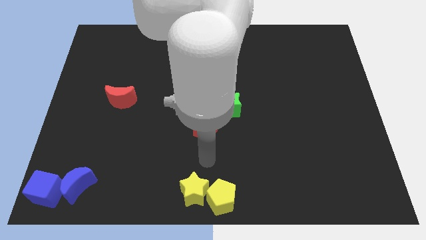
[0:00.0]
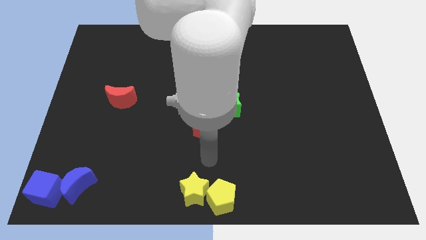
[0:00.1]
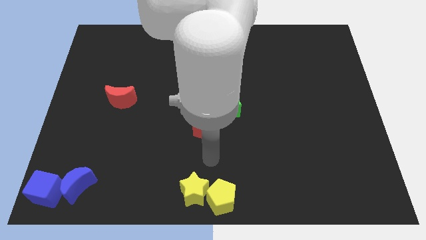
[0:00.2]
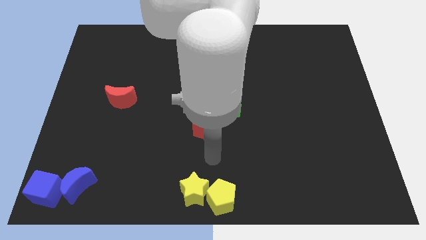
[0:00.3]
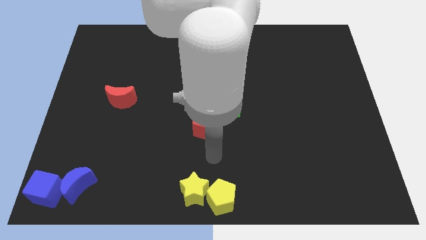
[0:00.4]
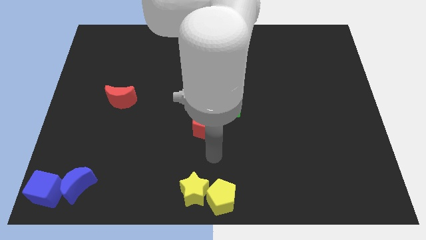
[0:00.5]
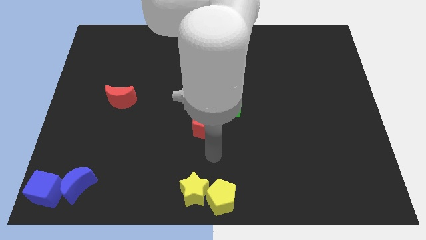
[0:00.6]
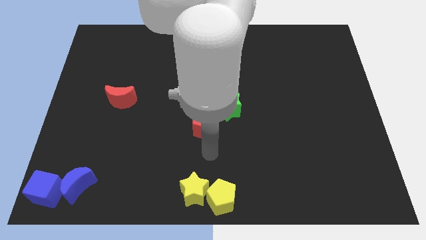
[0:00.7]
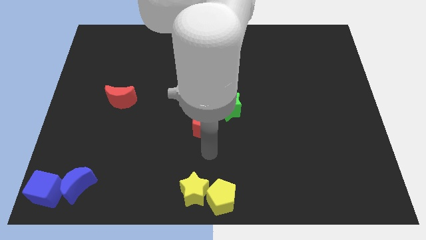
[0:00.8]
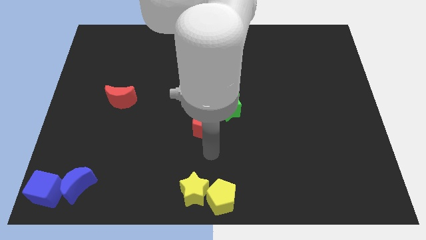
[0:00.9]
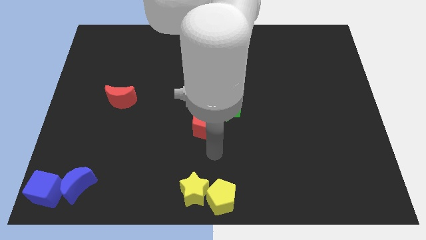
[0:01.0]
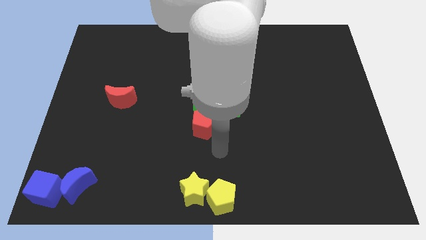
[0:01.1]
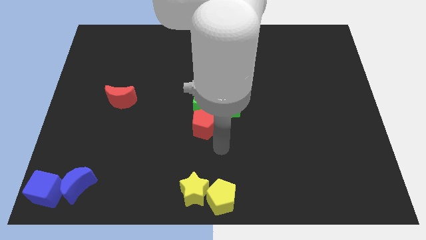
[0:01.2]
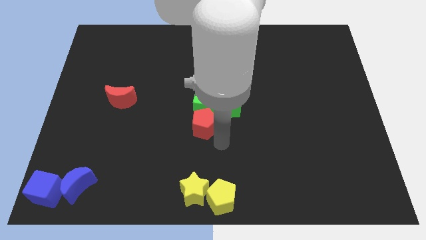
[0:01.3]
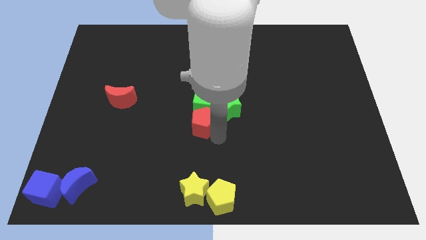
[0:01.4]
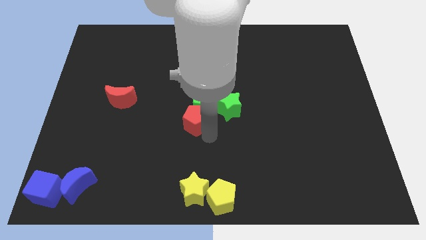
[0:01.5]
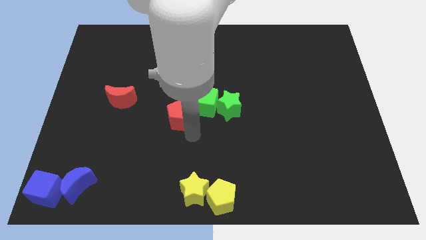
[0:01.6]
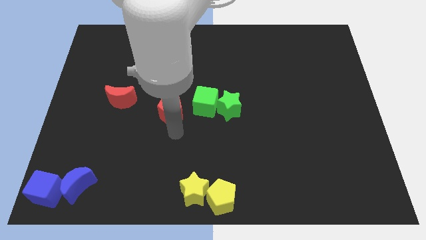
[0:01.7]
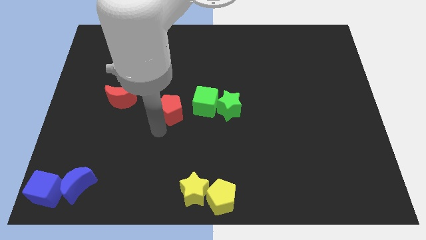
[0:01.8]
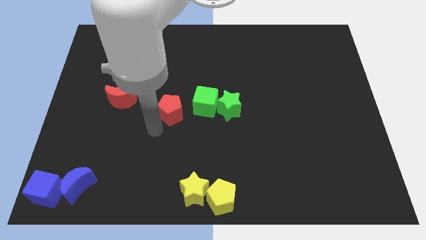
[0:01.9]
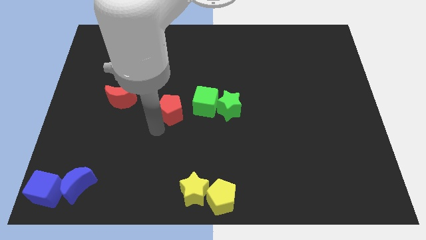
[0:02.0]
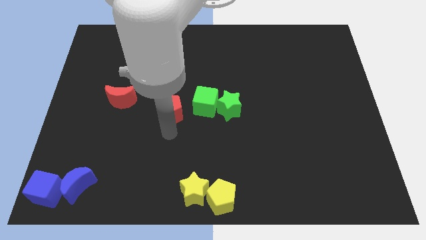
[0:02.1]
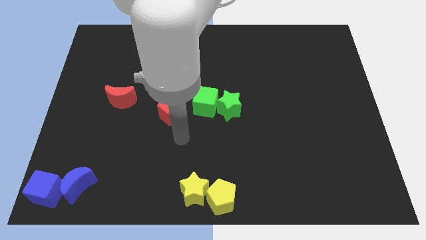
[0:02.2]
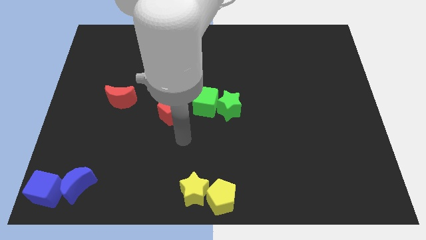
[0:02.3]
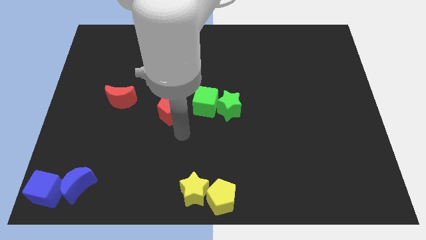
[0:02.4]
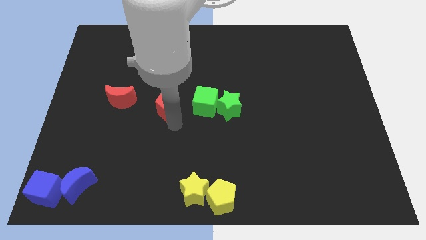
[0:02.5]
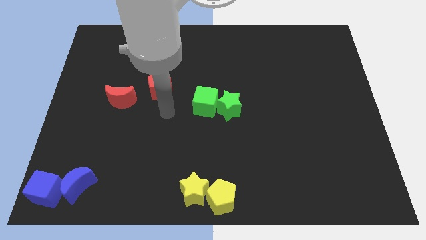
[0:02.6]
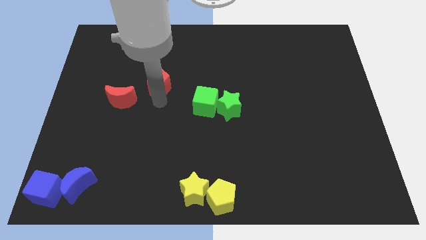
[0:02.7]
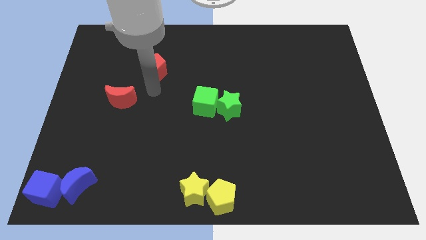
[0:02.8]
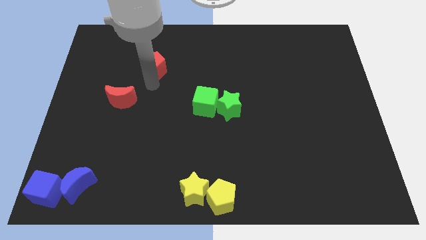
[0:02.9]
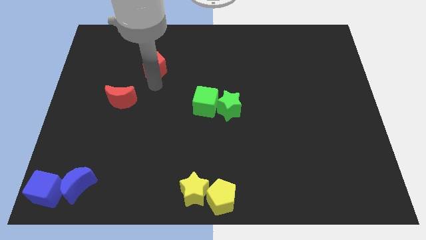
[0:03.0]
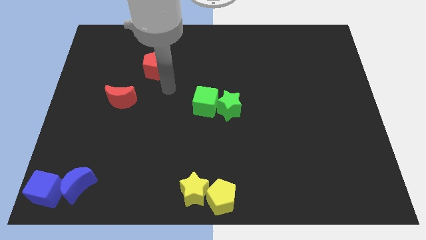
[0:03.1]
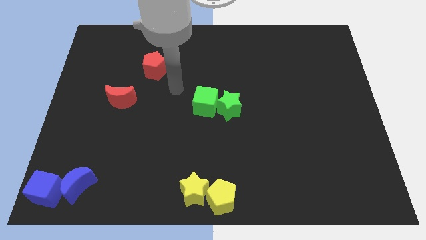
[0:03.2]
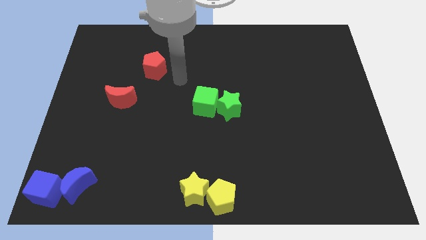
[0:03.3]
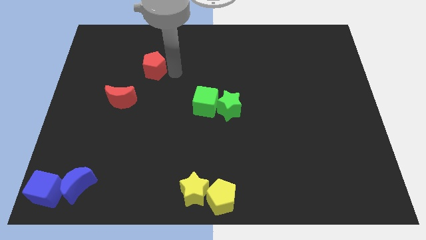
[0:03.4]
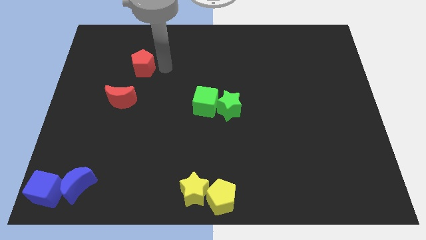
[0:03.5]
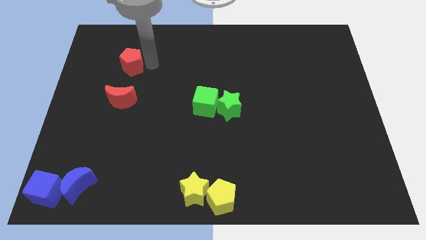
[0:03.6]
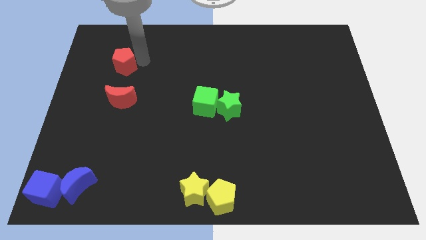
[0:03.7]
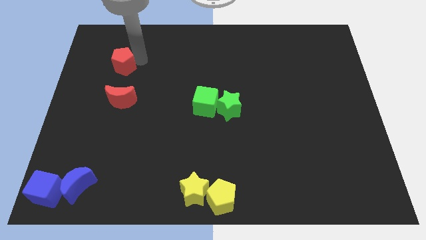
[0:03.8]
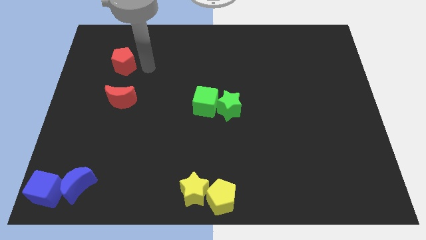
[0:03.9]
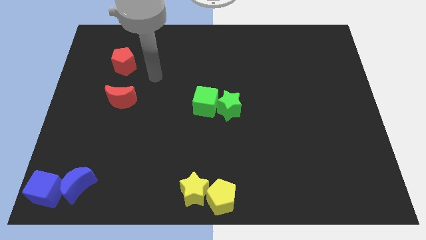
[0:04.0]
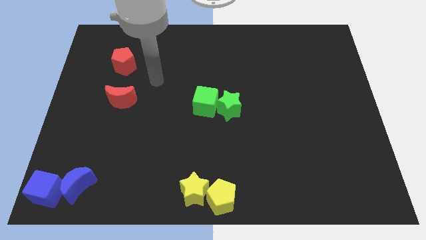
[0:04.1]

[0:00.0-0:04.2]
place the red pentagon above the red moon

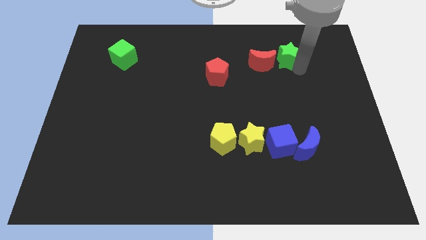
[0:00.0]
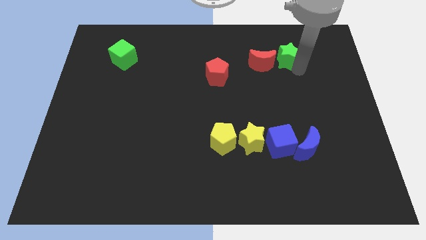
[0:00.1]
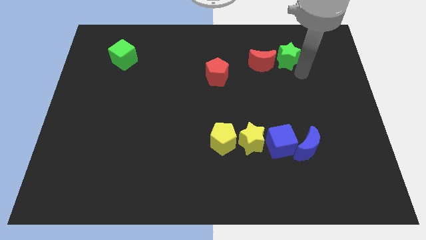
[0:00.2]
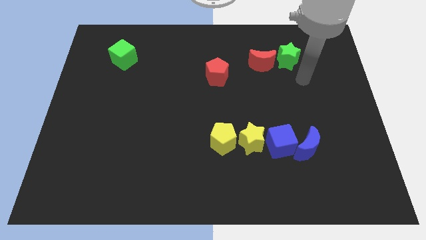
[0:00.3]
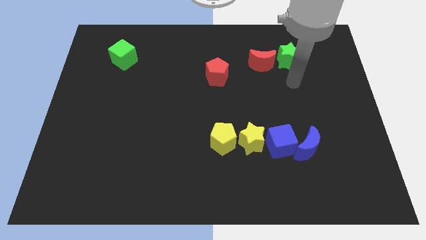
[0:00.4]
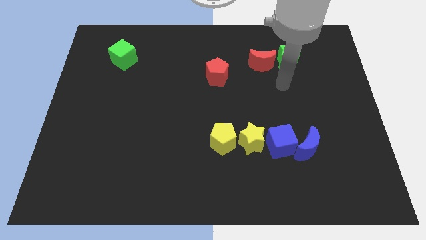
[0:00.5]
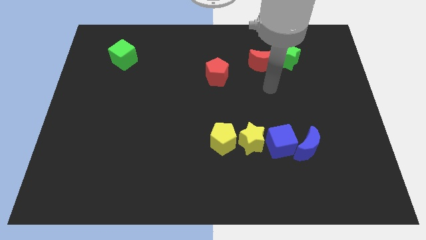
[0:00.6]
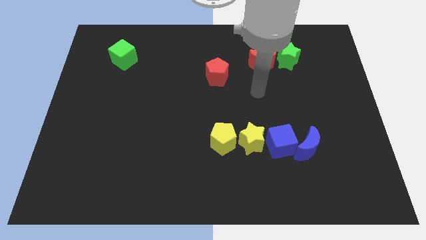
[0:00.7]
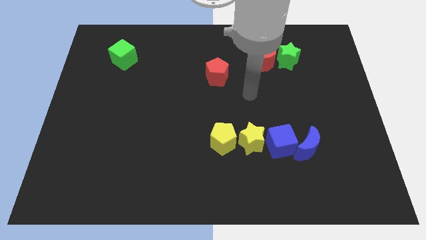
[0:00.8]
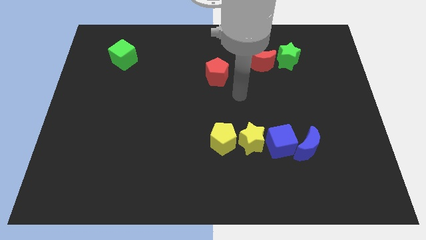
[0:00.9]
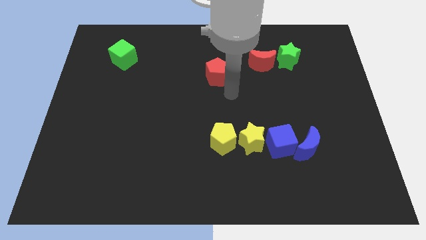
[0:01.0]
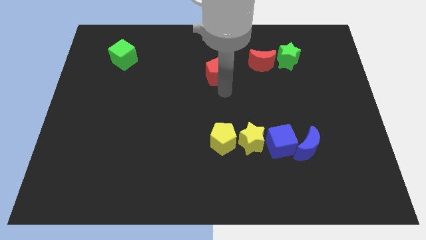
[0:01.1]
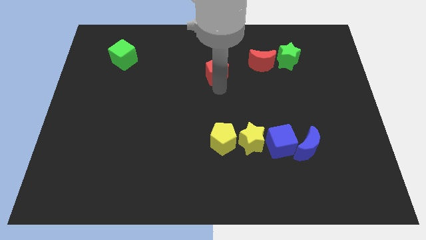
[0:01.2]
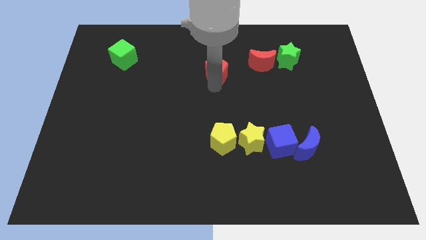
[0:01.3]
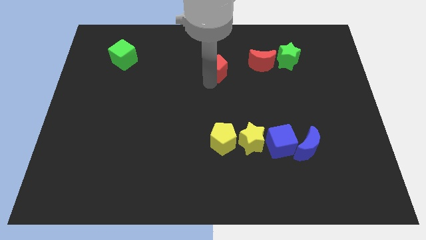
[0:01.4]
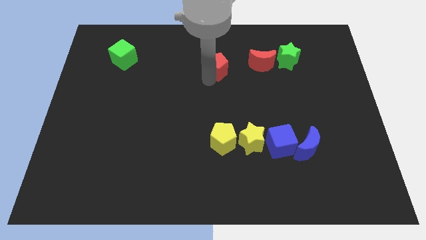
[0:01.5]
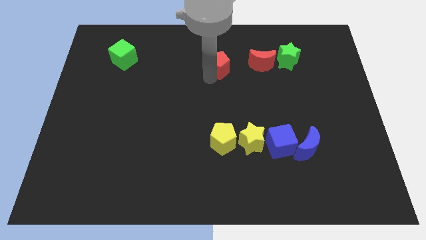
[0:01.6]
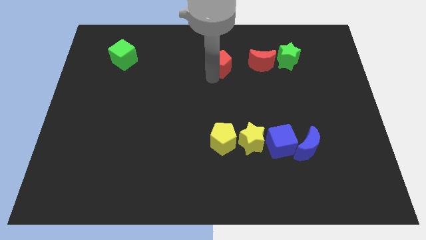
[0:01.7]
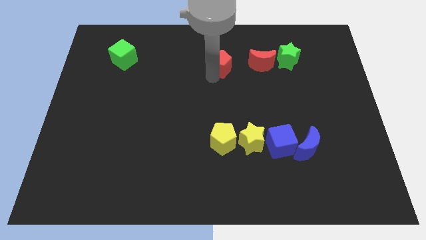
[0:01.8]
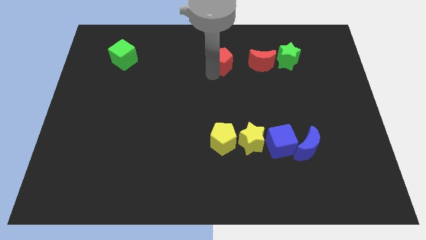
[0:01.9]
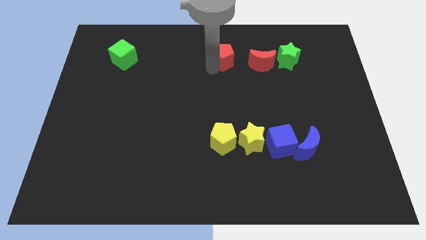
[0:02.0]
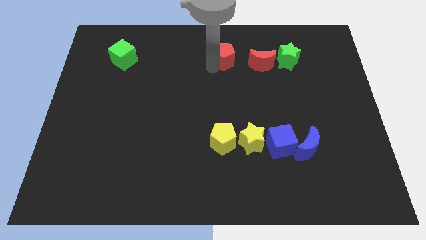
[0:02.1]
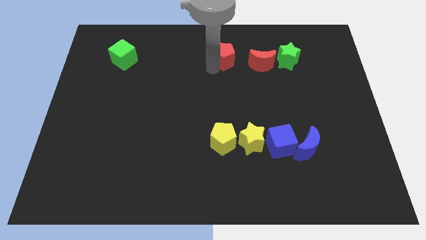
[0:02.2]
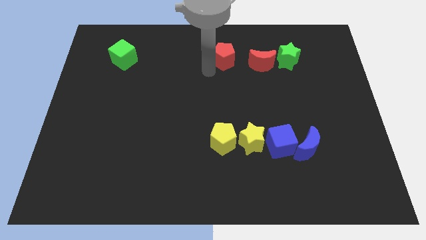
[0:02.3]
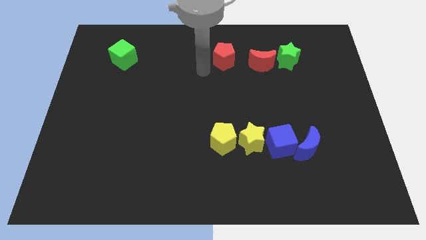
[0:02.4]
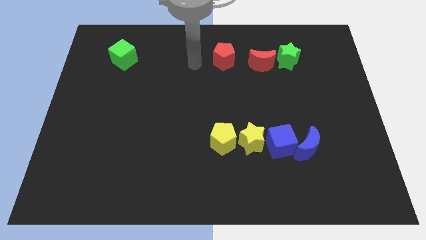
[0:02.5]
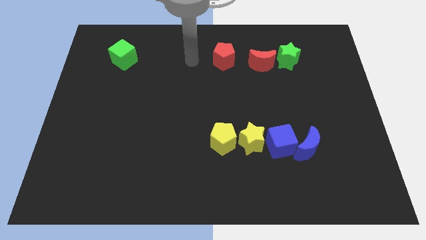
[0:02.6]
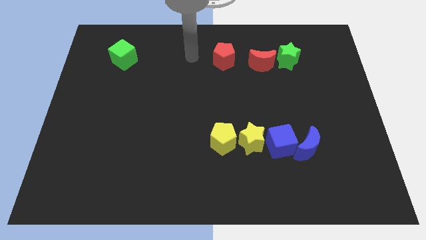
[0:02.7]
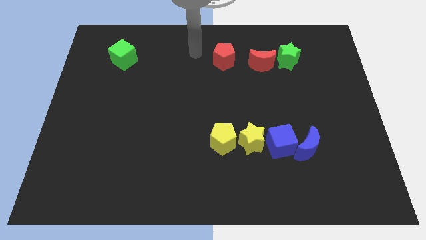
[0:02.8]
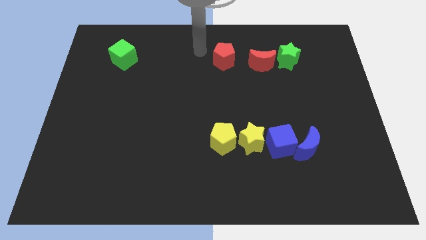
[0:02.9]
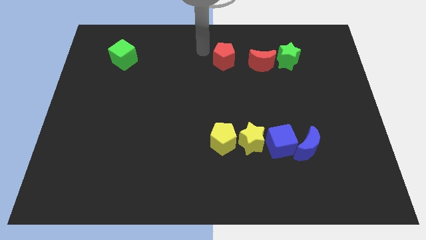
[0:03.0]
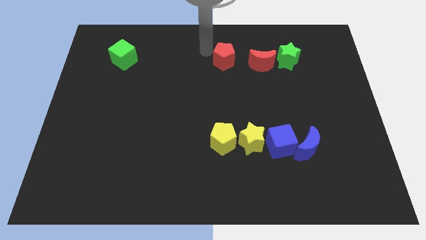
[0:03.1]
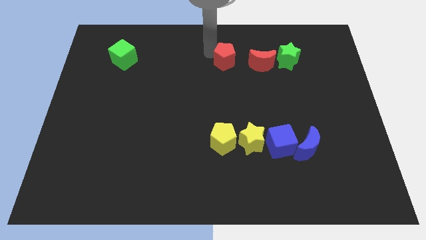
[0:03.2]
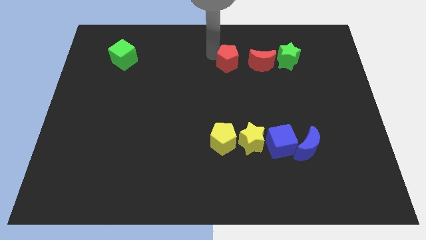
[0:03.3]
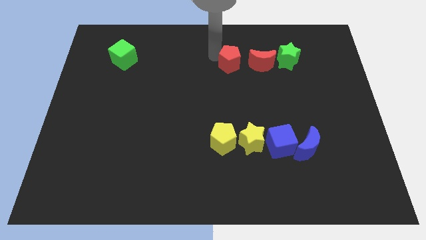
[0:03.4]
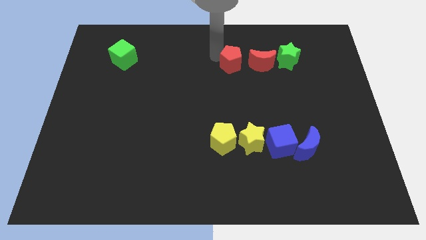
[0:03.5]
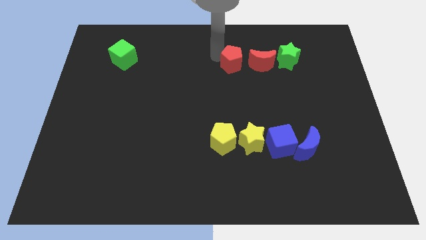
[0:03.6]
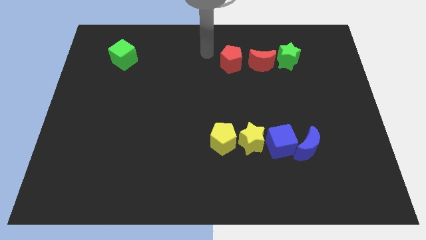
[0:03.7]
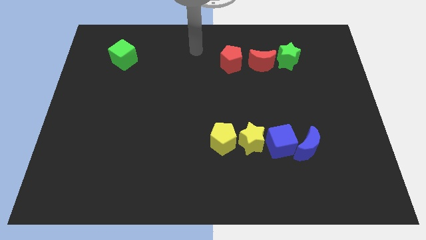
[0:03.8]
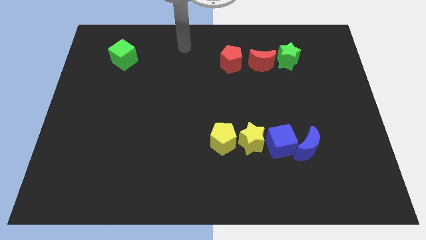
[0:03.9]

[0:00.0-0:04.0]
place the red pentagon at the left of the red moon

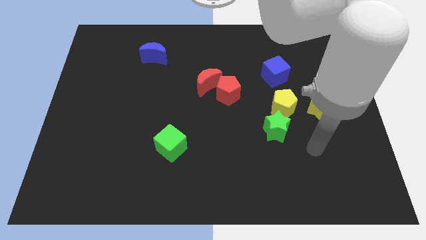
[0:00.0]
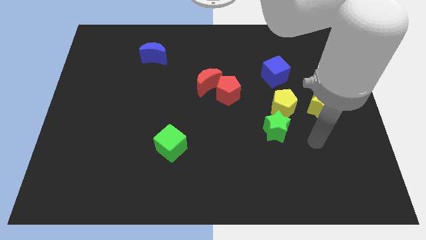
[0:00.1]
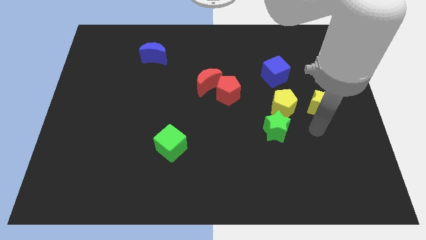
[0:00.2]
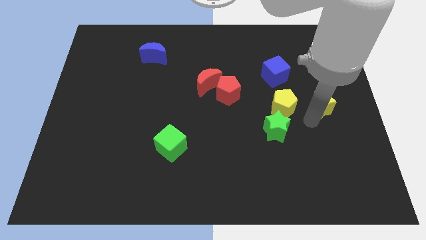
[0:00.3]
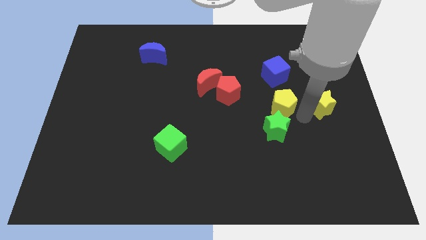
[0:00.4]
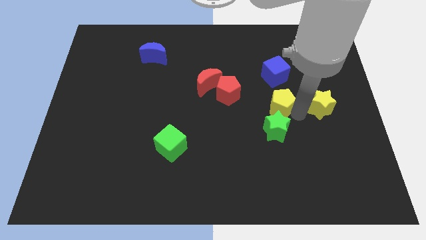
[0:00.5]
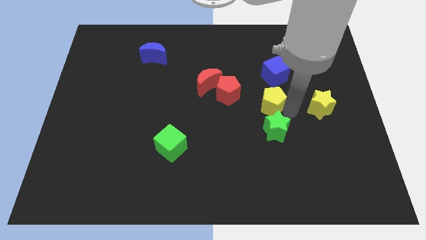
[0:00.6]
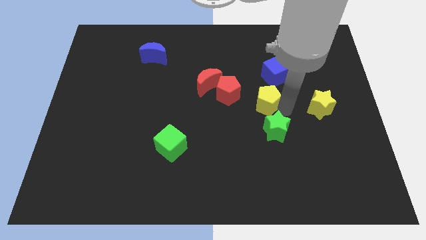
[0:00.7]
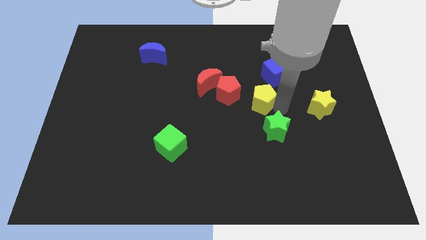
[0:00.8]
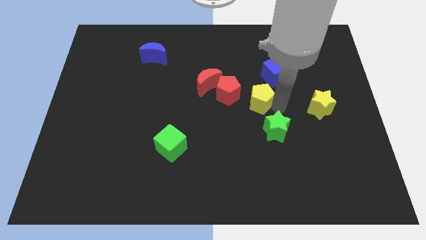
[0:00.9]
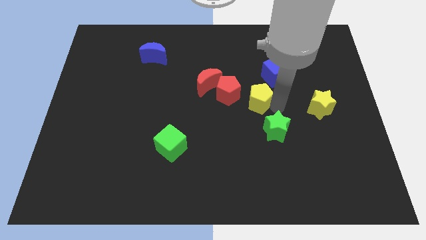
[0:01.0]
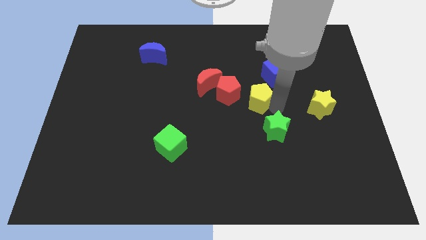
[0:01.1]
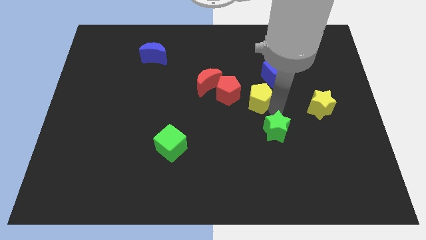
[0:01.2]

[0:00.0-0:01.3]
move the yellow pentagon slightly left
